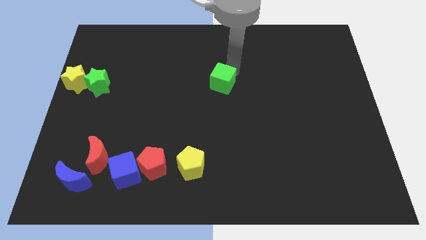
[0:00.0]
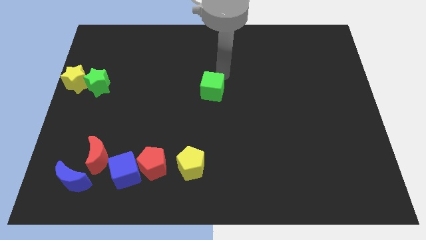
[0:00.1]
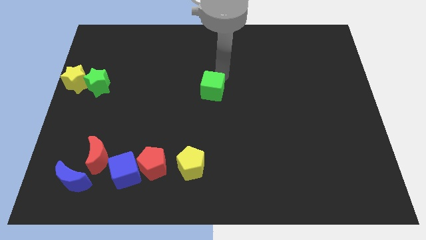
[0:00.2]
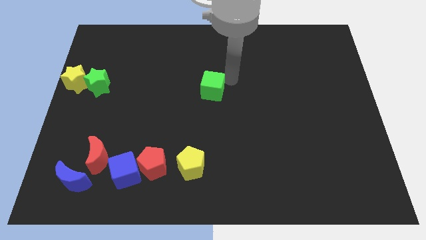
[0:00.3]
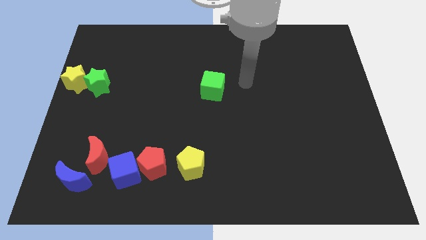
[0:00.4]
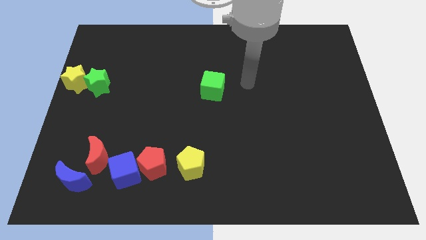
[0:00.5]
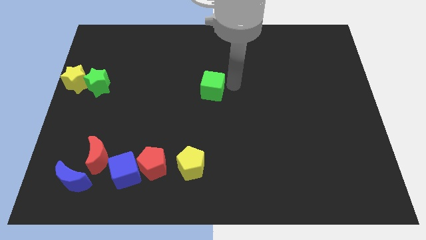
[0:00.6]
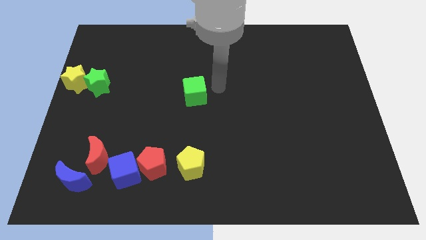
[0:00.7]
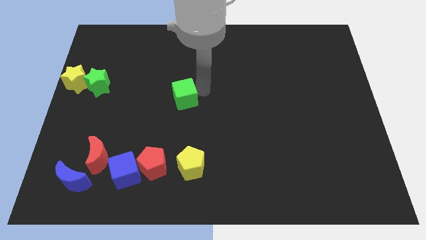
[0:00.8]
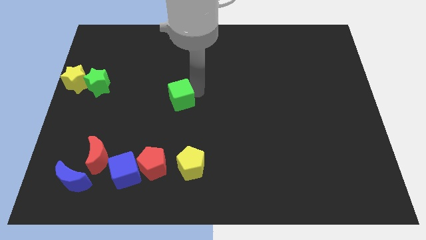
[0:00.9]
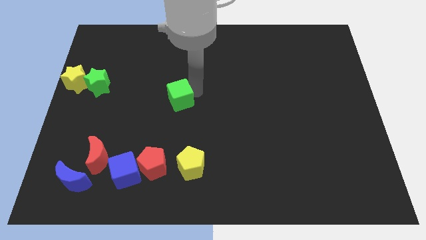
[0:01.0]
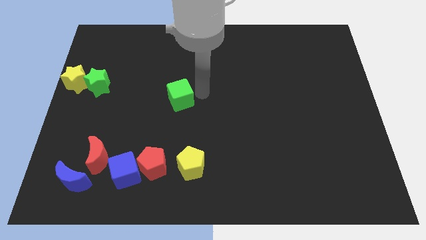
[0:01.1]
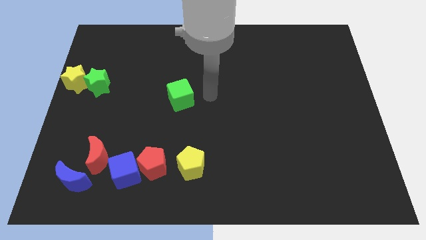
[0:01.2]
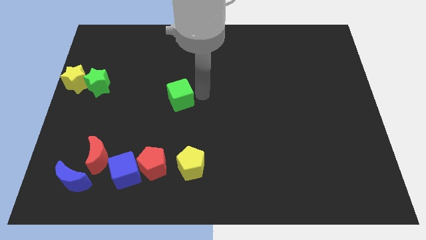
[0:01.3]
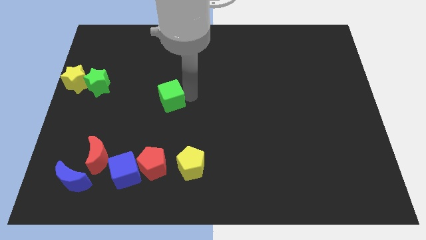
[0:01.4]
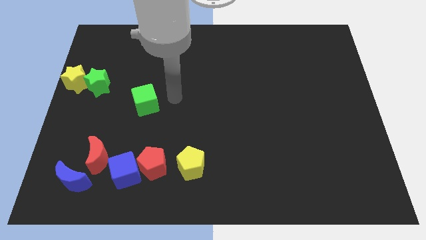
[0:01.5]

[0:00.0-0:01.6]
move the green cube towards the left side of the board

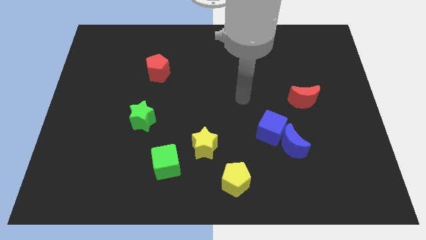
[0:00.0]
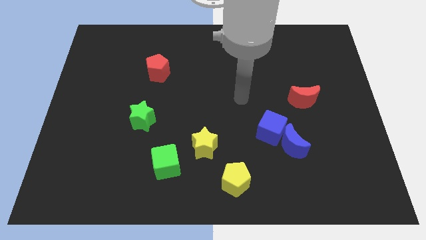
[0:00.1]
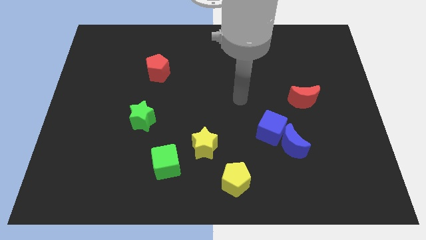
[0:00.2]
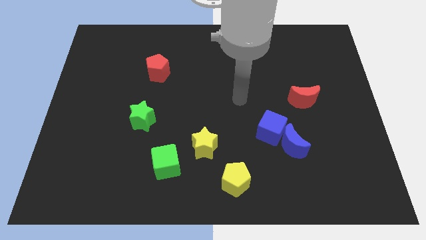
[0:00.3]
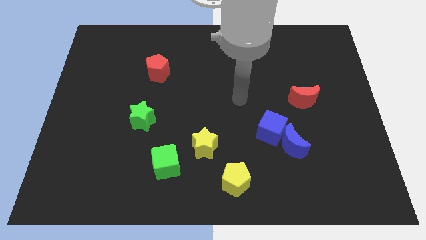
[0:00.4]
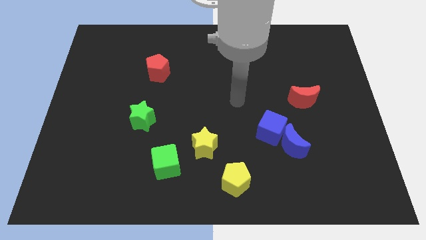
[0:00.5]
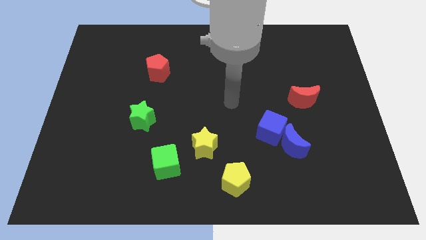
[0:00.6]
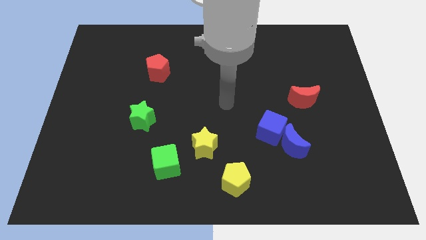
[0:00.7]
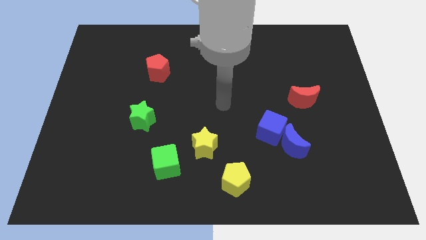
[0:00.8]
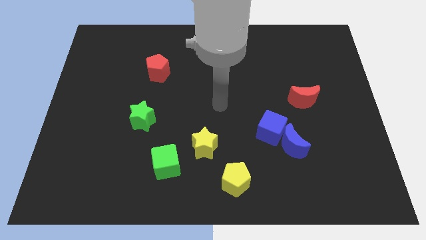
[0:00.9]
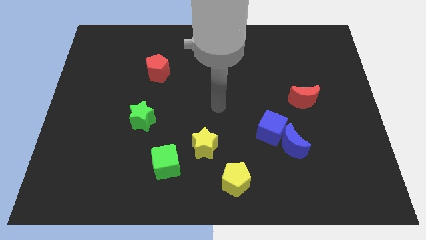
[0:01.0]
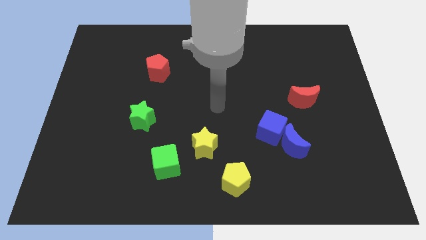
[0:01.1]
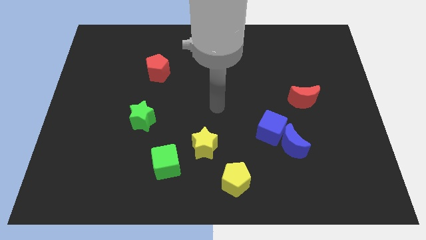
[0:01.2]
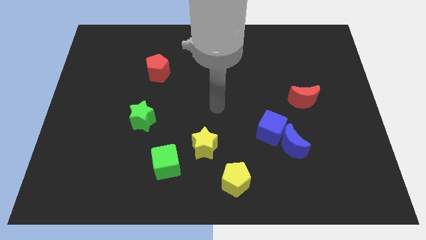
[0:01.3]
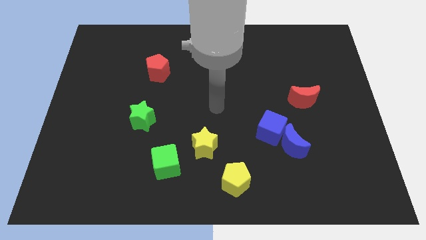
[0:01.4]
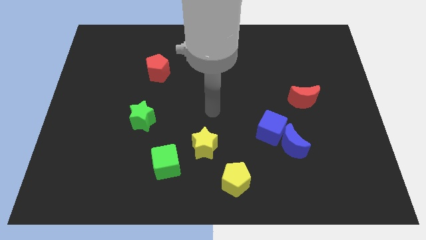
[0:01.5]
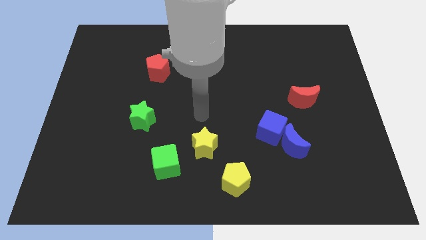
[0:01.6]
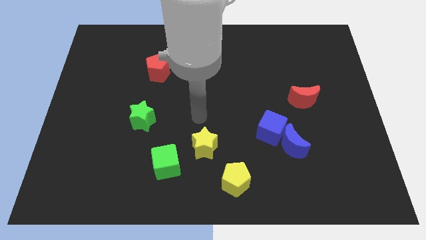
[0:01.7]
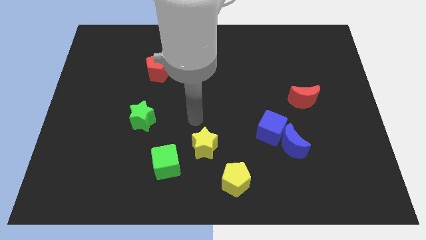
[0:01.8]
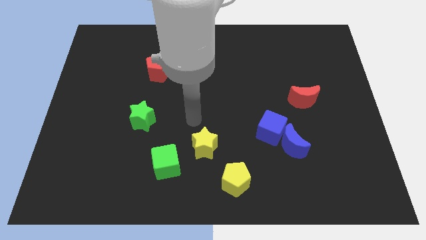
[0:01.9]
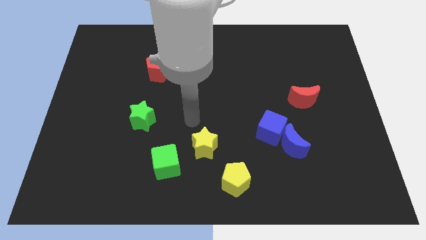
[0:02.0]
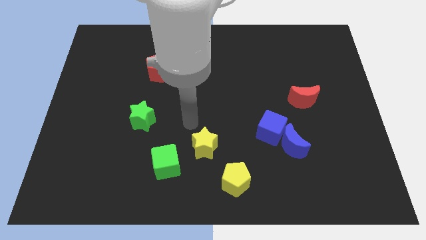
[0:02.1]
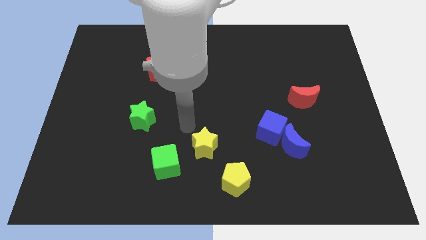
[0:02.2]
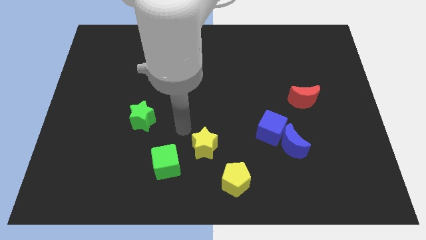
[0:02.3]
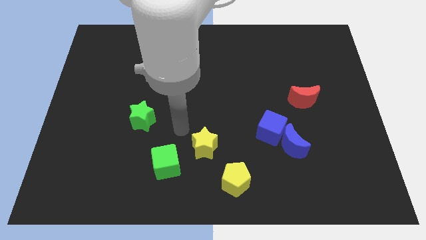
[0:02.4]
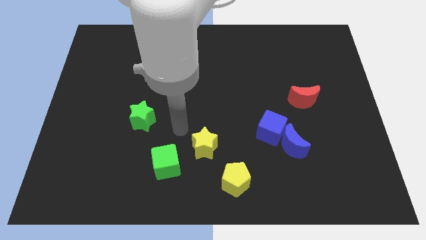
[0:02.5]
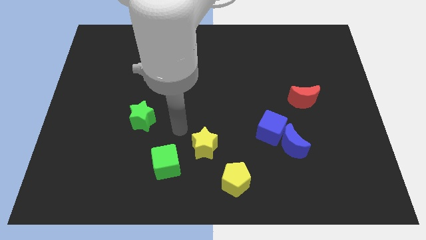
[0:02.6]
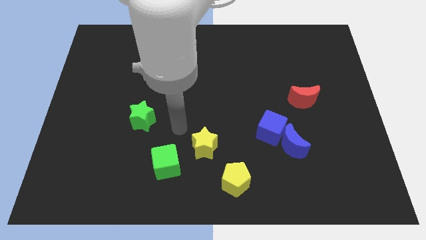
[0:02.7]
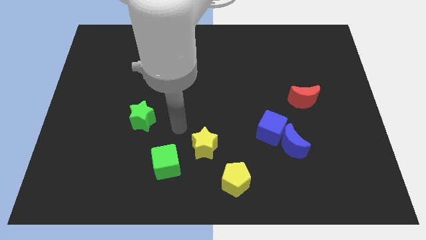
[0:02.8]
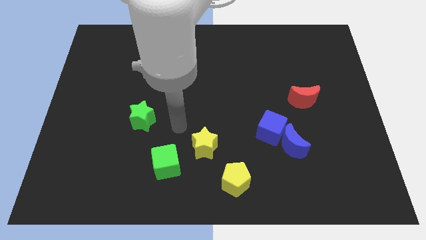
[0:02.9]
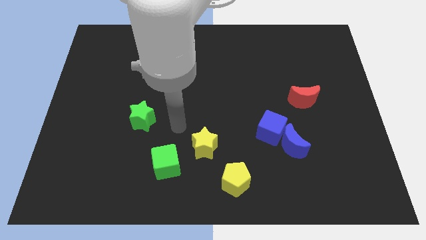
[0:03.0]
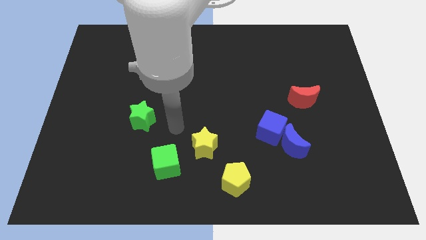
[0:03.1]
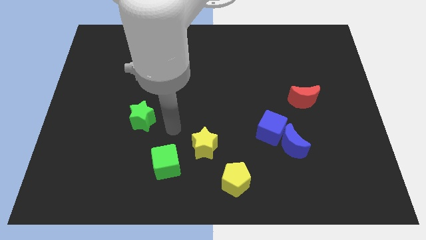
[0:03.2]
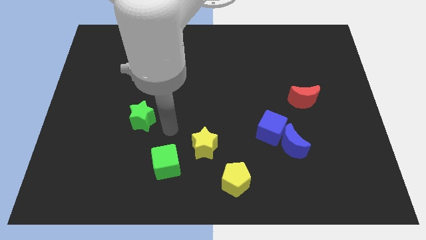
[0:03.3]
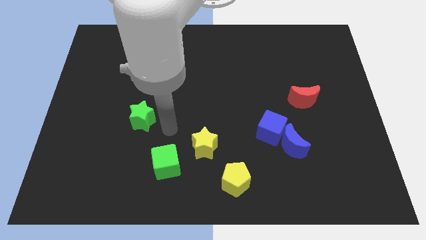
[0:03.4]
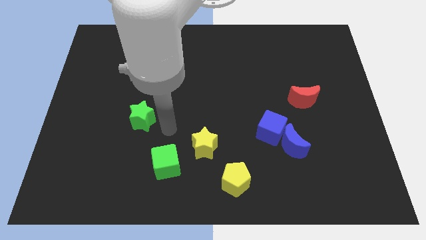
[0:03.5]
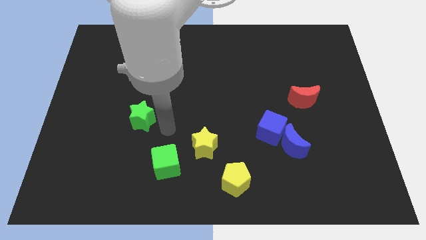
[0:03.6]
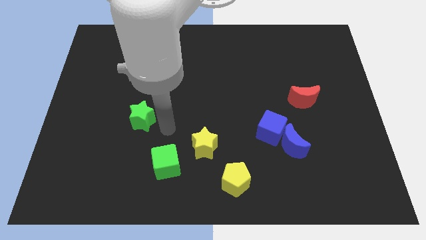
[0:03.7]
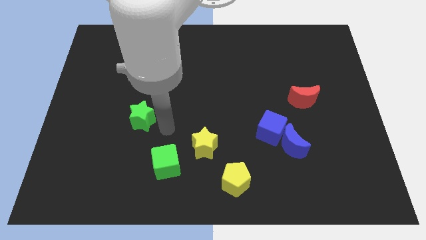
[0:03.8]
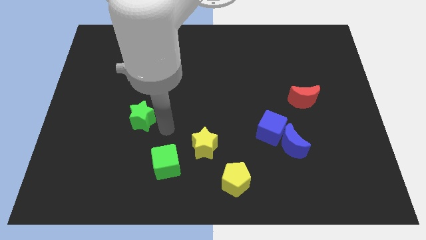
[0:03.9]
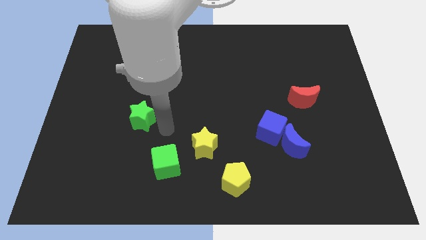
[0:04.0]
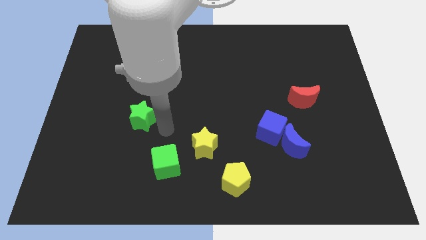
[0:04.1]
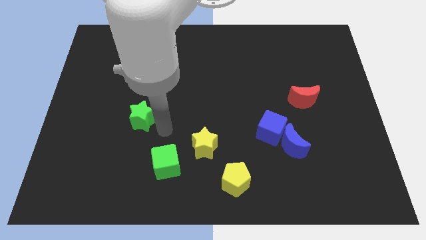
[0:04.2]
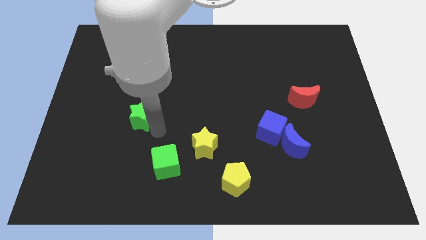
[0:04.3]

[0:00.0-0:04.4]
move the arm towards green star

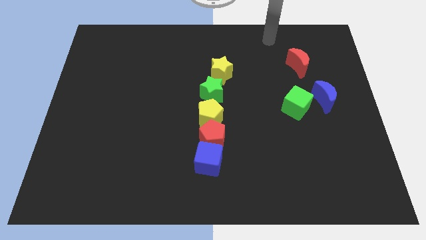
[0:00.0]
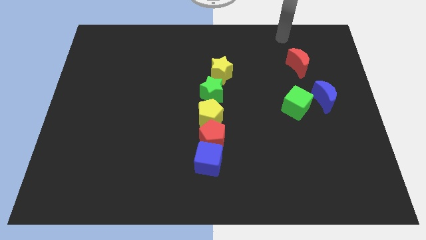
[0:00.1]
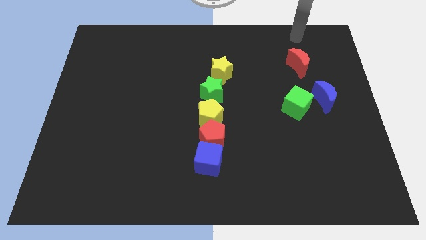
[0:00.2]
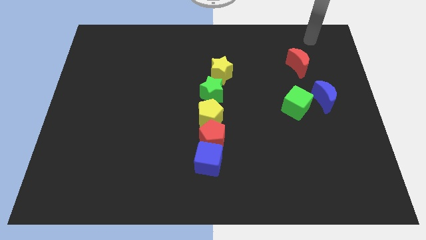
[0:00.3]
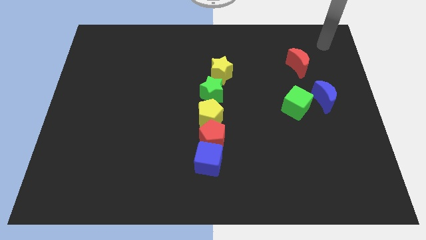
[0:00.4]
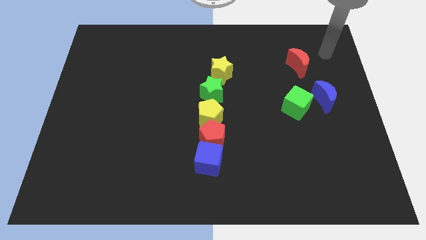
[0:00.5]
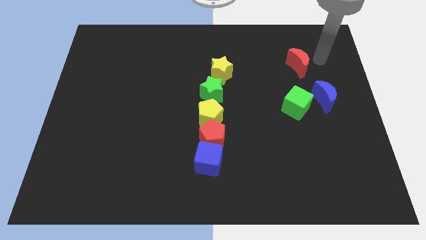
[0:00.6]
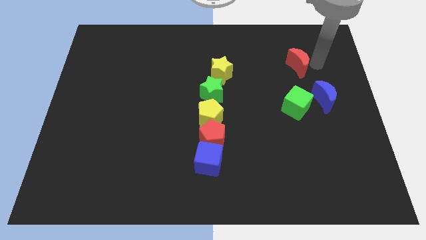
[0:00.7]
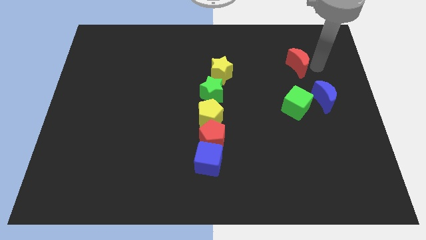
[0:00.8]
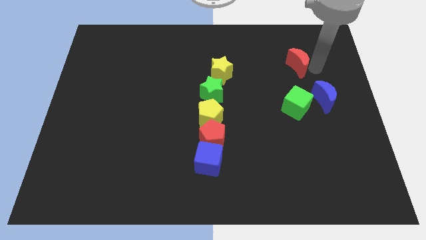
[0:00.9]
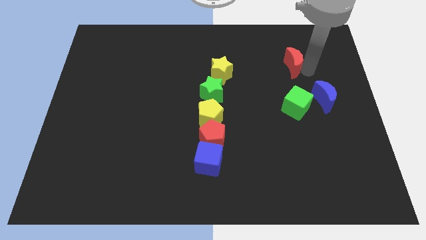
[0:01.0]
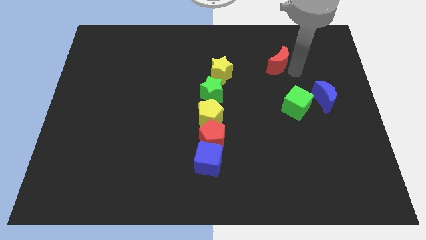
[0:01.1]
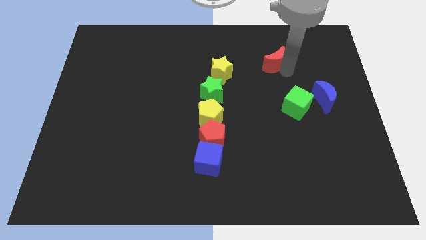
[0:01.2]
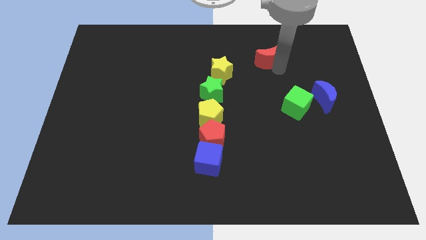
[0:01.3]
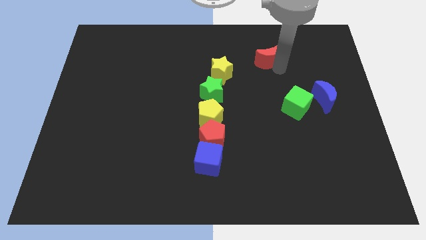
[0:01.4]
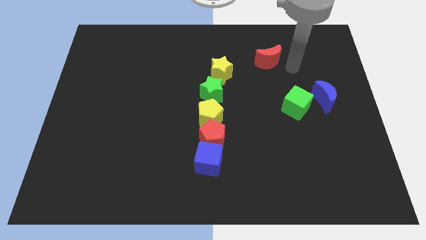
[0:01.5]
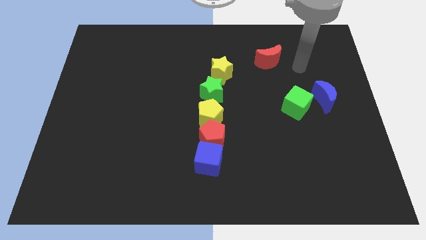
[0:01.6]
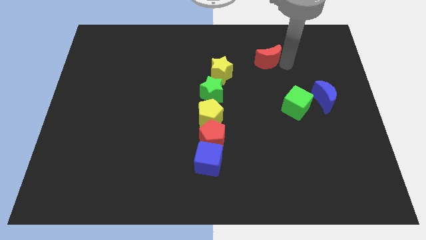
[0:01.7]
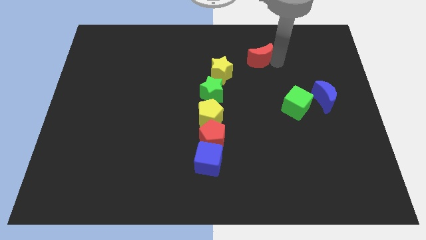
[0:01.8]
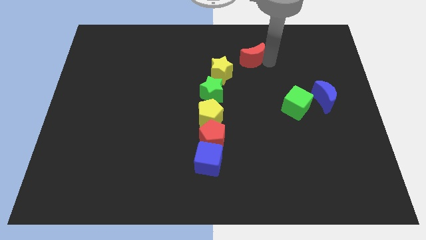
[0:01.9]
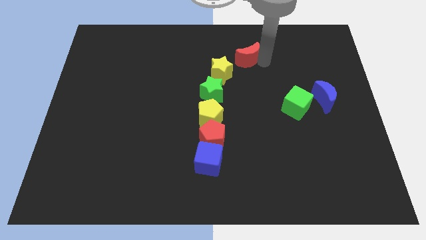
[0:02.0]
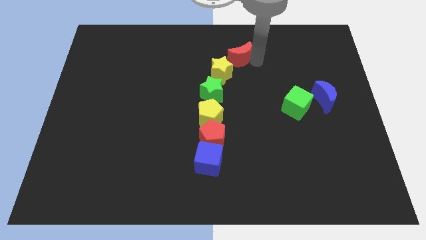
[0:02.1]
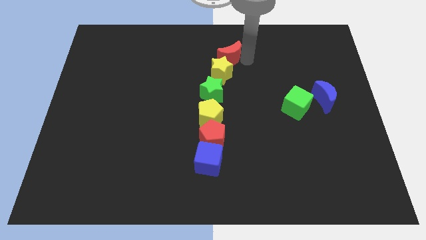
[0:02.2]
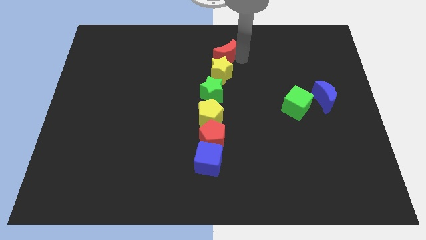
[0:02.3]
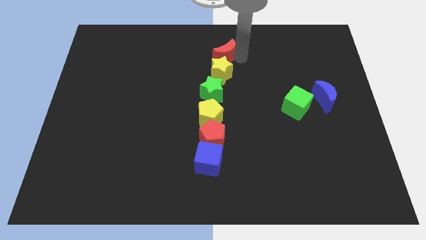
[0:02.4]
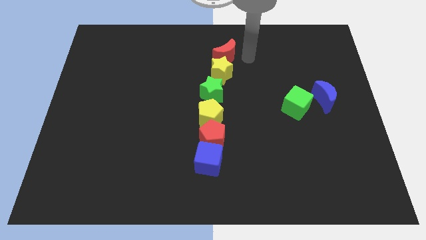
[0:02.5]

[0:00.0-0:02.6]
move the red moon above the yellow star

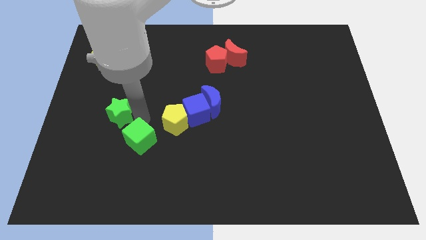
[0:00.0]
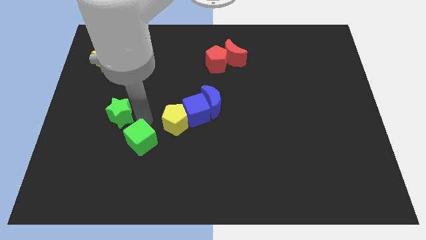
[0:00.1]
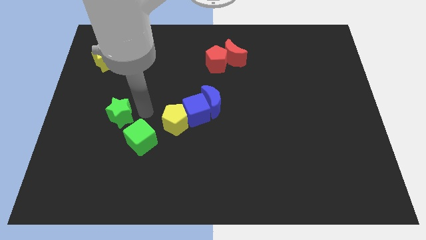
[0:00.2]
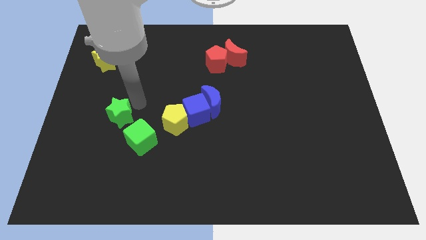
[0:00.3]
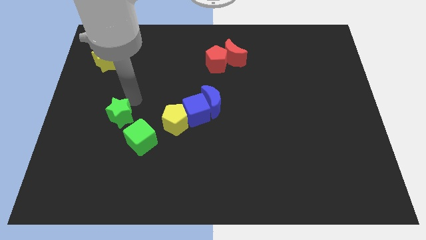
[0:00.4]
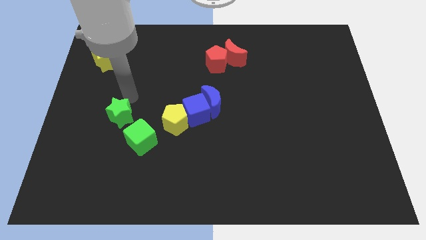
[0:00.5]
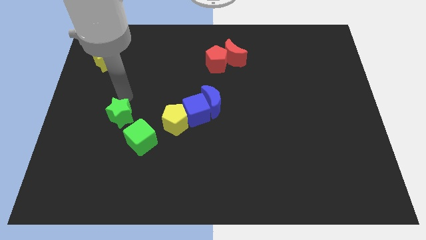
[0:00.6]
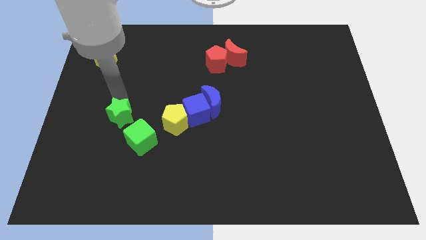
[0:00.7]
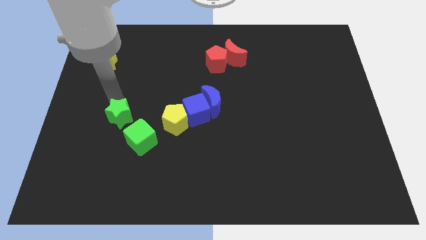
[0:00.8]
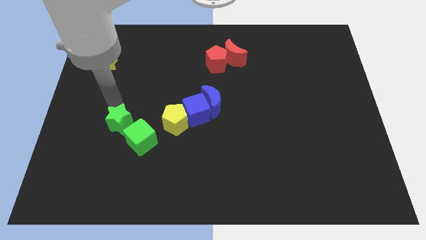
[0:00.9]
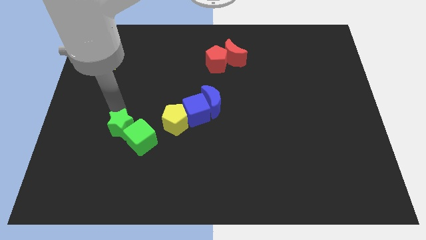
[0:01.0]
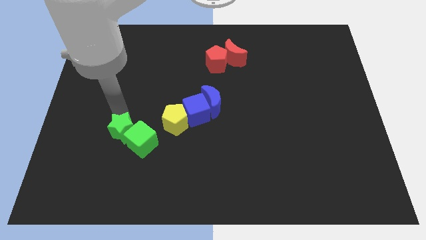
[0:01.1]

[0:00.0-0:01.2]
move the green star into the green cube to the left of the yellow pentagon
